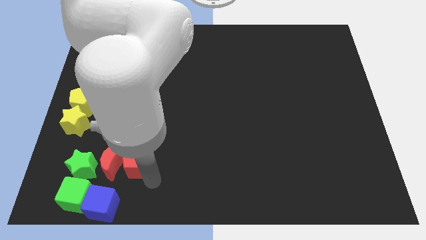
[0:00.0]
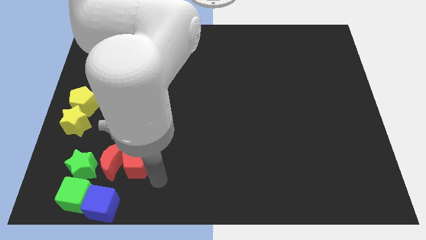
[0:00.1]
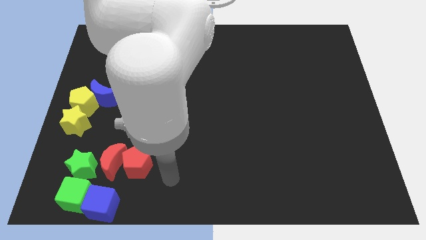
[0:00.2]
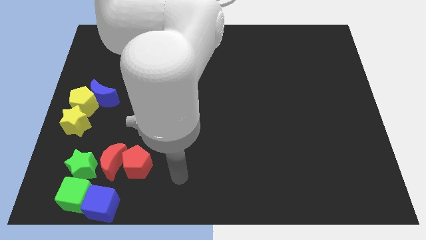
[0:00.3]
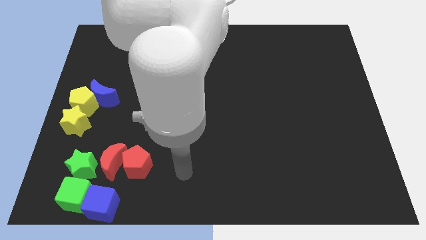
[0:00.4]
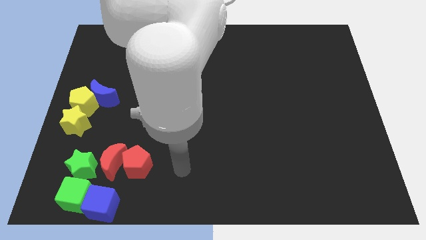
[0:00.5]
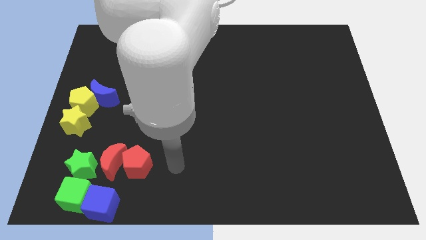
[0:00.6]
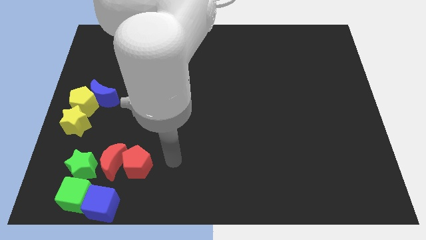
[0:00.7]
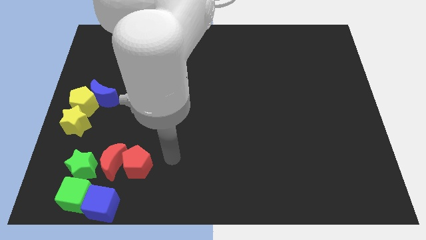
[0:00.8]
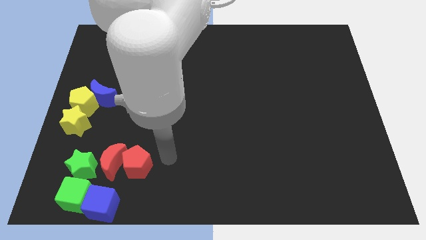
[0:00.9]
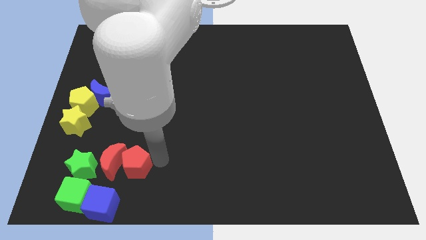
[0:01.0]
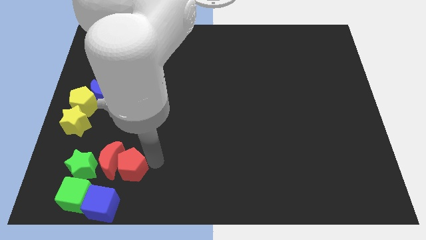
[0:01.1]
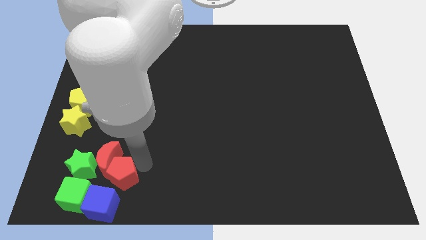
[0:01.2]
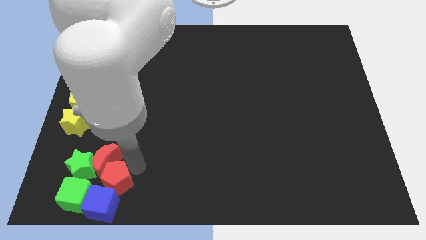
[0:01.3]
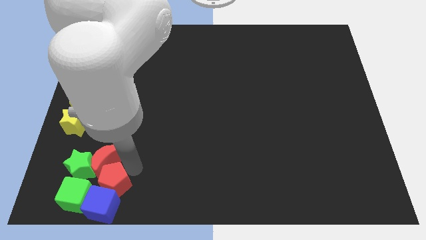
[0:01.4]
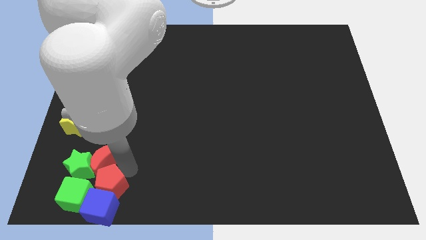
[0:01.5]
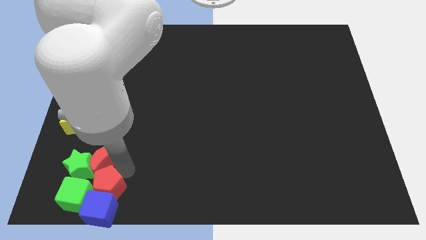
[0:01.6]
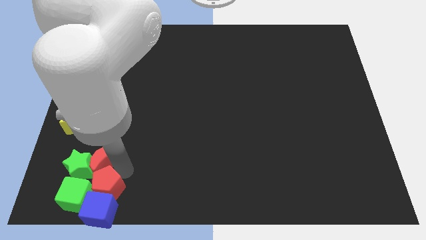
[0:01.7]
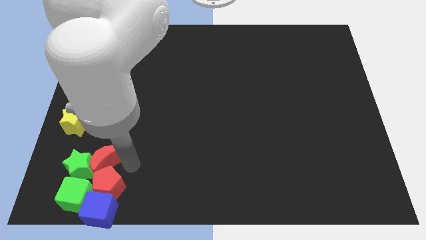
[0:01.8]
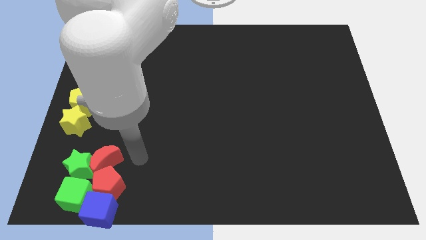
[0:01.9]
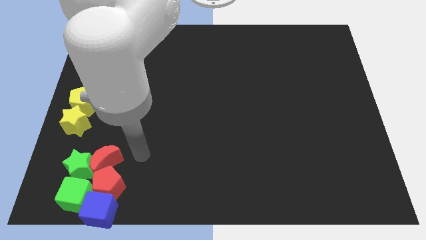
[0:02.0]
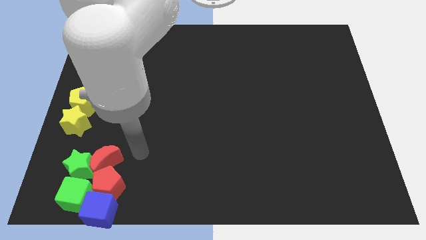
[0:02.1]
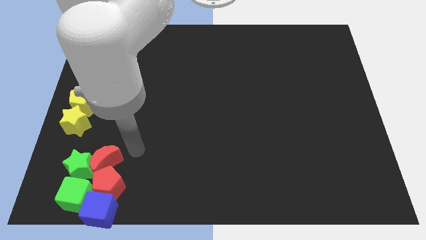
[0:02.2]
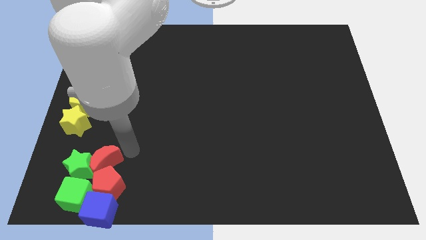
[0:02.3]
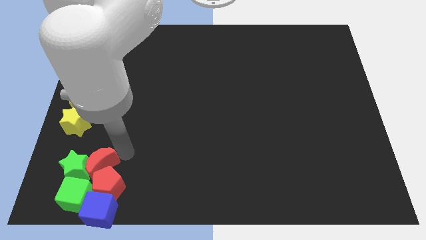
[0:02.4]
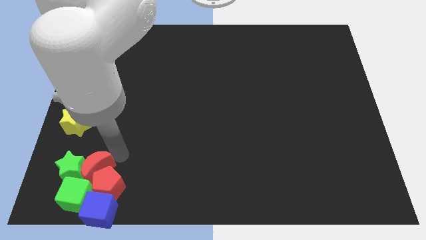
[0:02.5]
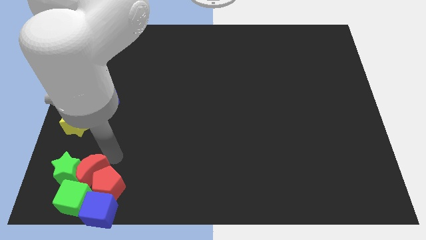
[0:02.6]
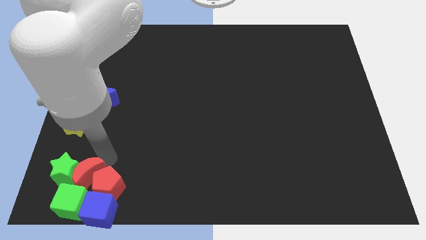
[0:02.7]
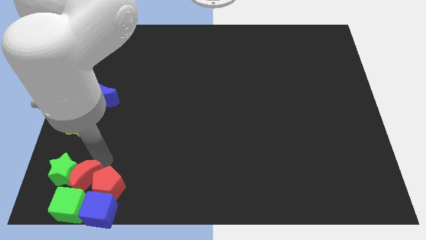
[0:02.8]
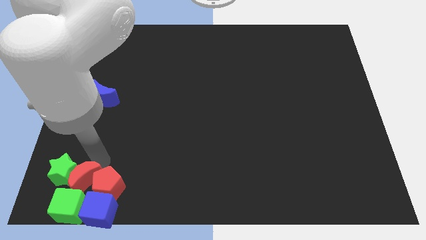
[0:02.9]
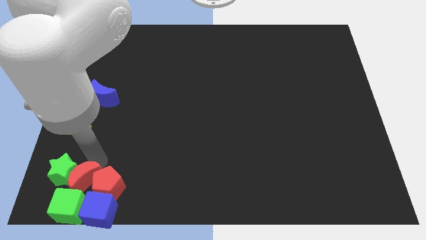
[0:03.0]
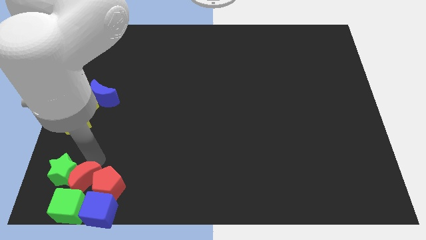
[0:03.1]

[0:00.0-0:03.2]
move the red pentagon and red crescent into the blue and green cubes

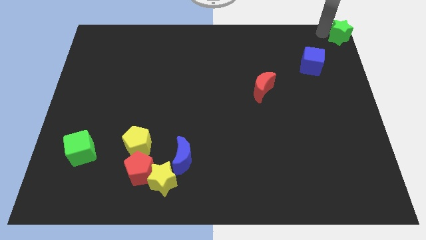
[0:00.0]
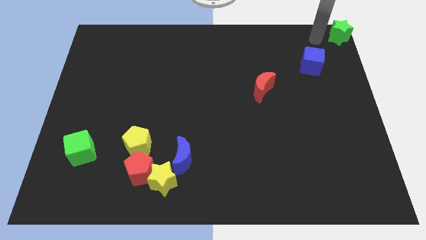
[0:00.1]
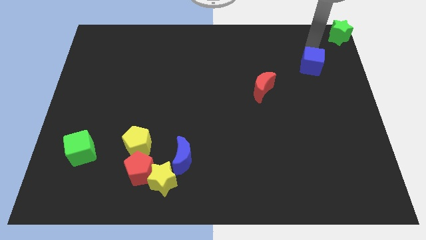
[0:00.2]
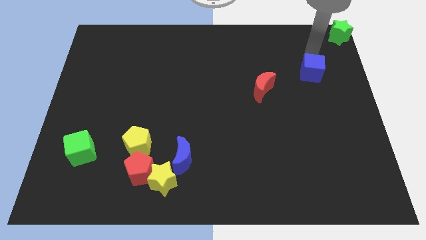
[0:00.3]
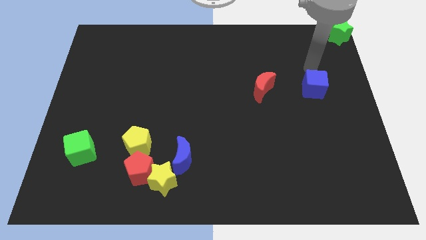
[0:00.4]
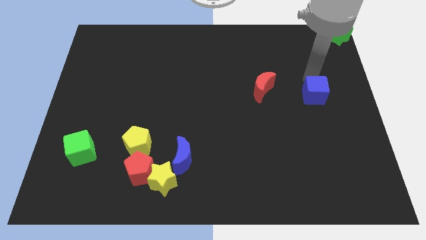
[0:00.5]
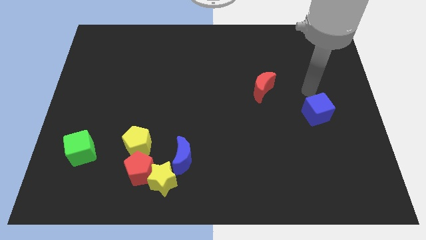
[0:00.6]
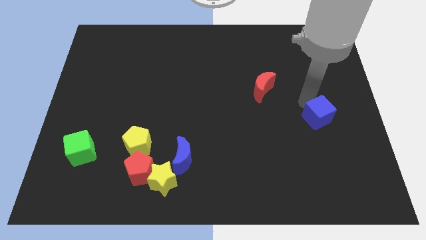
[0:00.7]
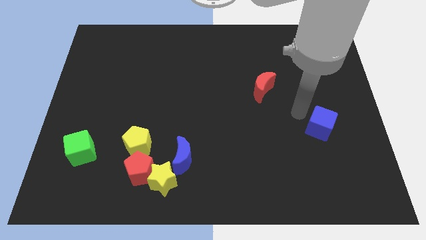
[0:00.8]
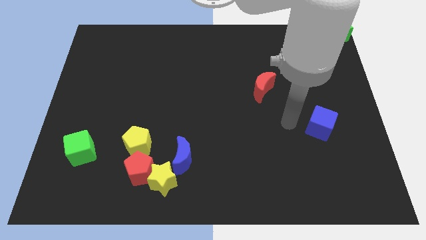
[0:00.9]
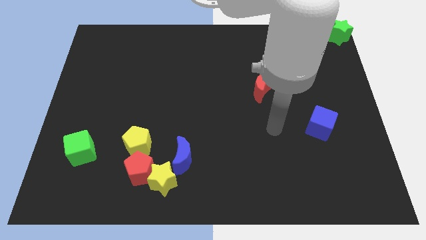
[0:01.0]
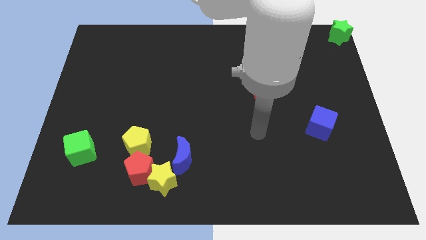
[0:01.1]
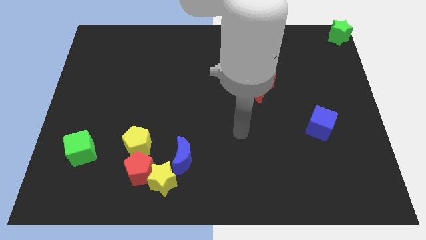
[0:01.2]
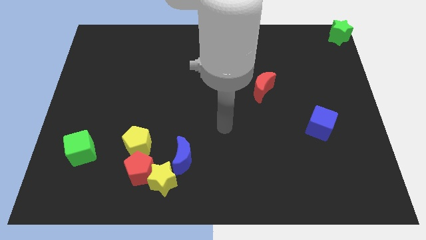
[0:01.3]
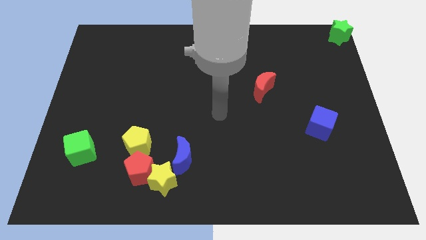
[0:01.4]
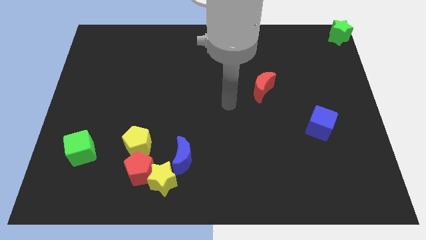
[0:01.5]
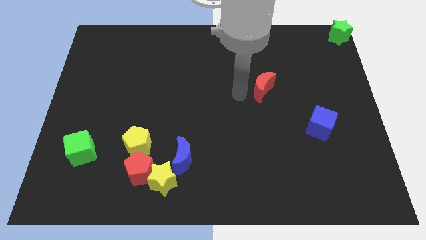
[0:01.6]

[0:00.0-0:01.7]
move the blue cube down slightly

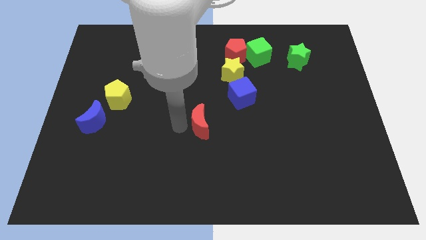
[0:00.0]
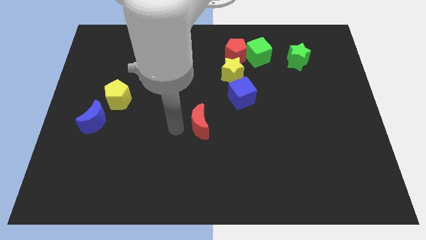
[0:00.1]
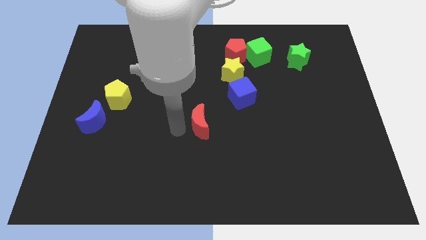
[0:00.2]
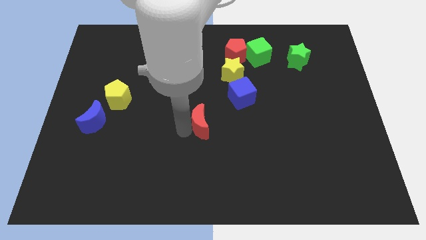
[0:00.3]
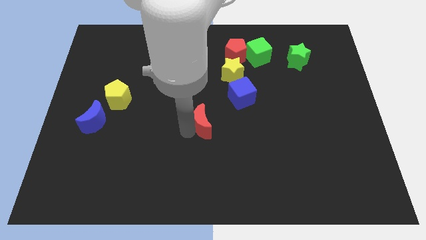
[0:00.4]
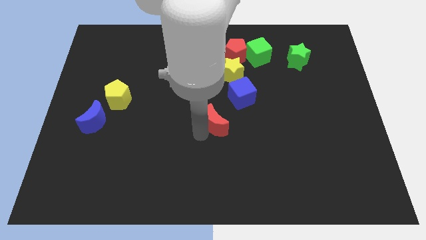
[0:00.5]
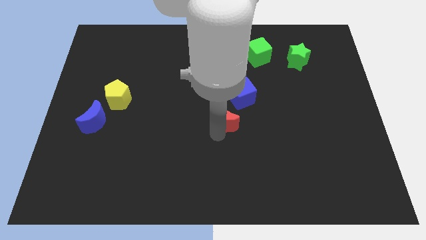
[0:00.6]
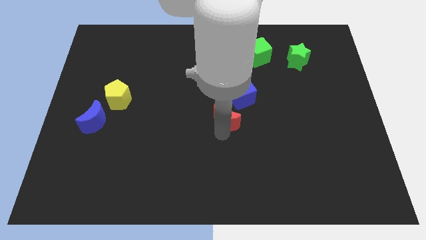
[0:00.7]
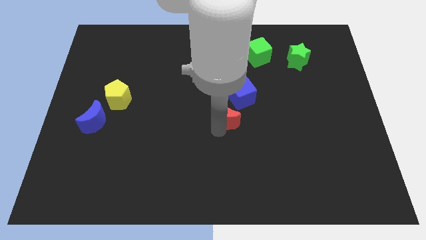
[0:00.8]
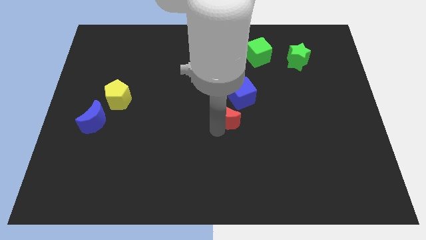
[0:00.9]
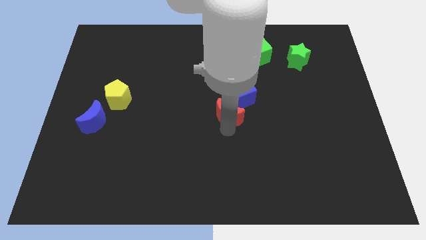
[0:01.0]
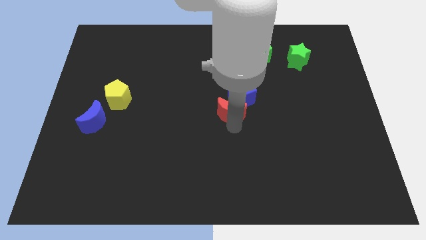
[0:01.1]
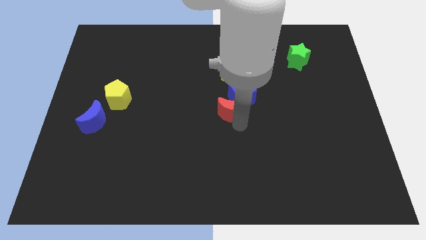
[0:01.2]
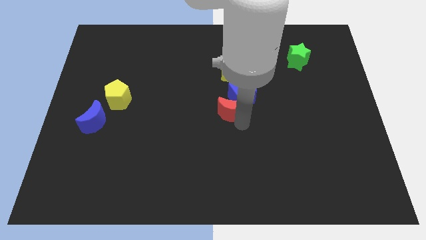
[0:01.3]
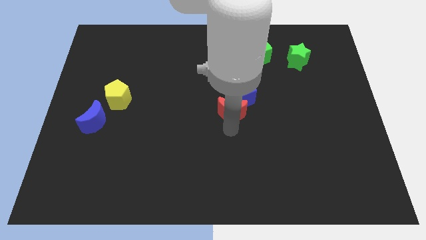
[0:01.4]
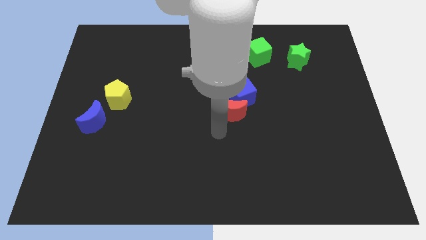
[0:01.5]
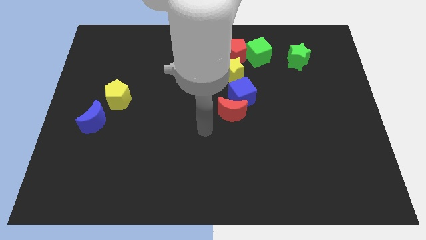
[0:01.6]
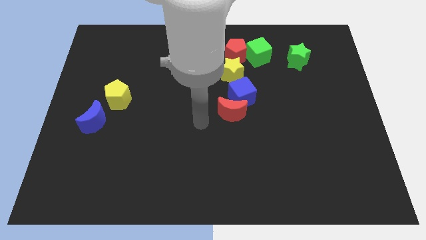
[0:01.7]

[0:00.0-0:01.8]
move the red crescent to the bottom of the blue cube

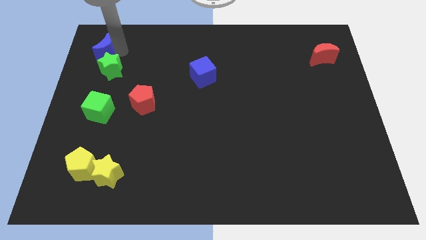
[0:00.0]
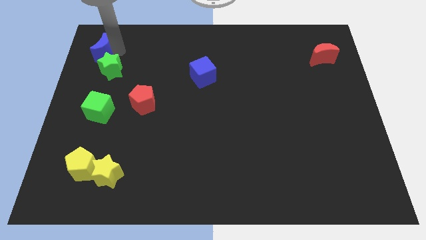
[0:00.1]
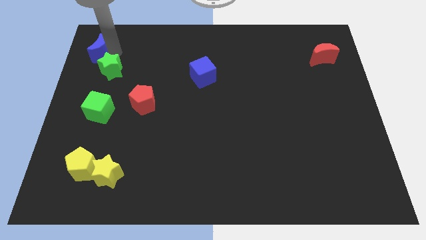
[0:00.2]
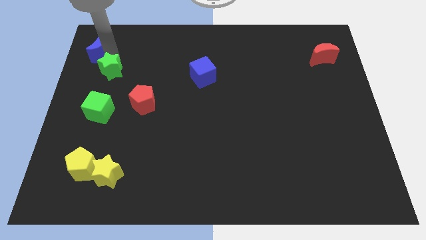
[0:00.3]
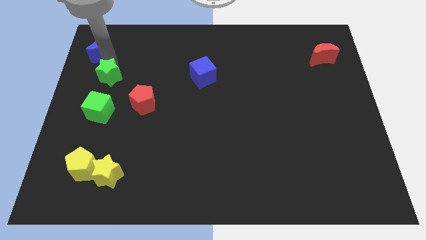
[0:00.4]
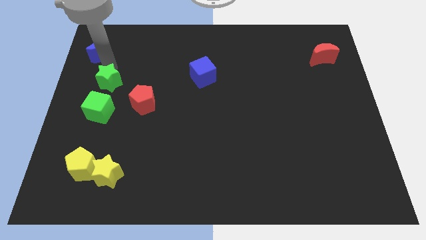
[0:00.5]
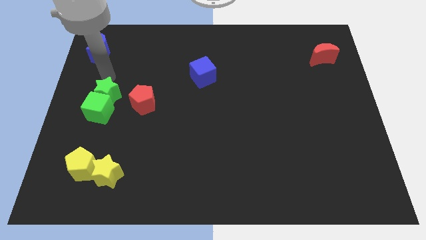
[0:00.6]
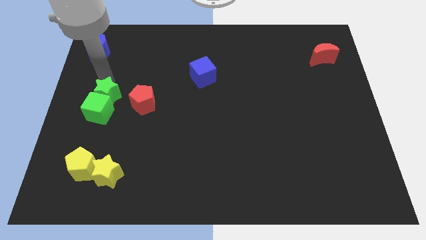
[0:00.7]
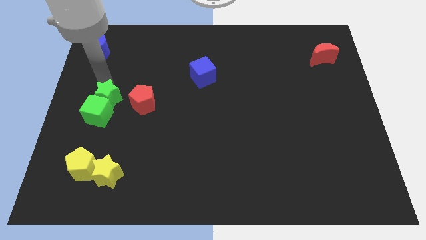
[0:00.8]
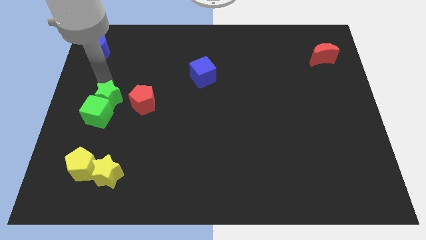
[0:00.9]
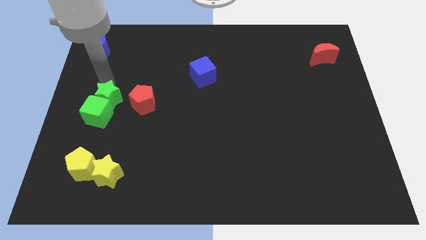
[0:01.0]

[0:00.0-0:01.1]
separate green star from blue crescent

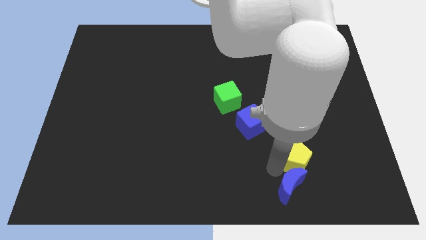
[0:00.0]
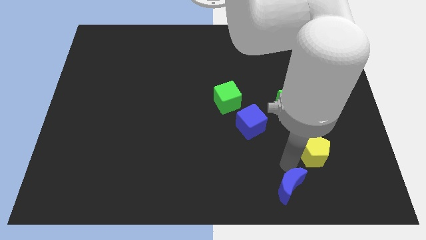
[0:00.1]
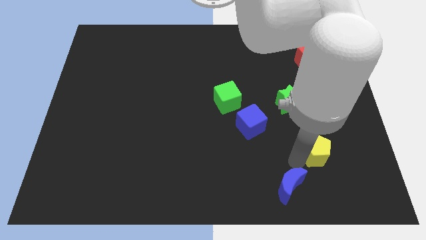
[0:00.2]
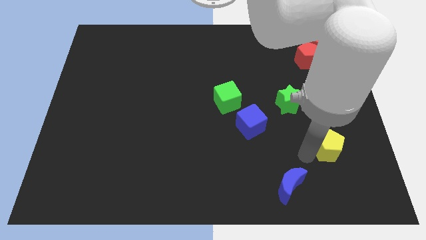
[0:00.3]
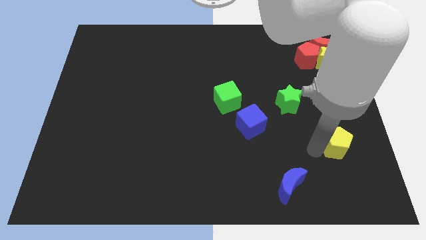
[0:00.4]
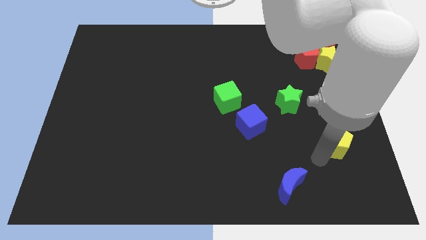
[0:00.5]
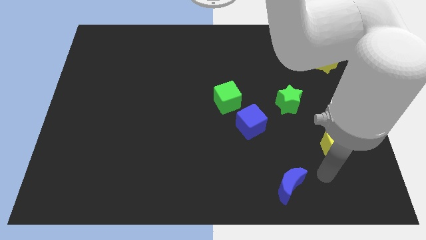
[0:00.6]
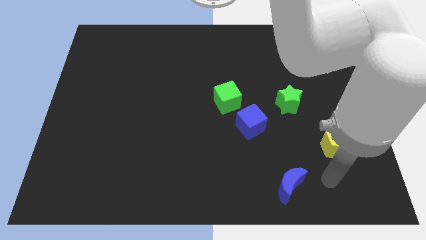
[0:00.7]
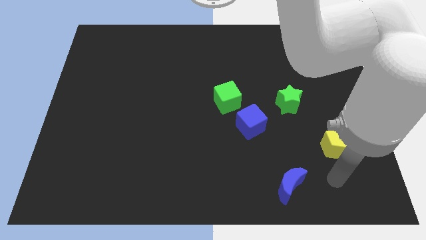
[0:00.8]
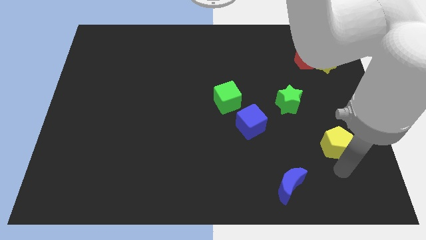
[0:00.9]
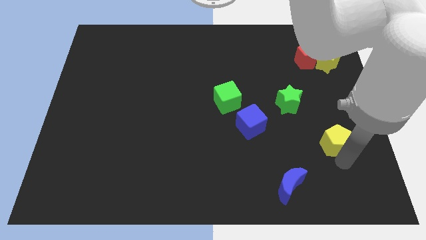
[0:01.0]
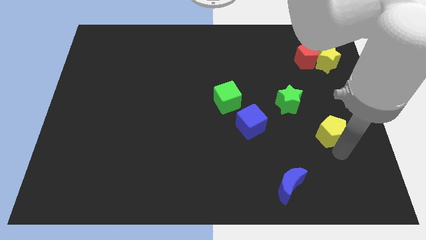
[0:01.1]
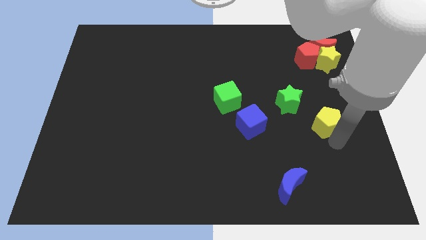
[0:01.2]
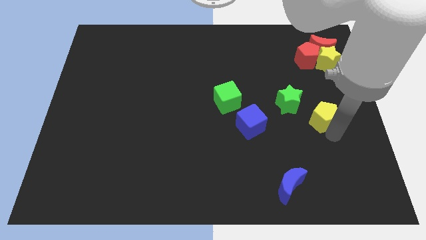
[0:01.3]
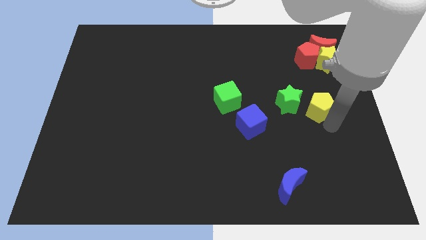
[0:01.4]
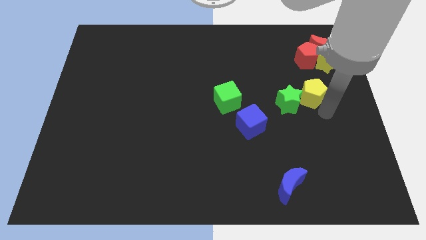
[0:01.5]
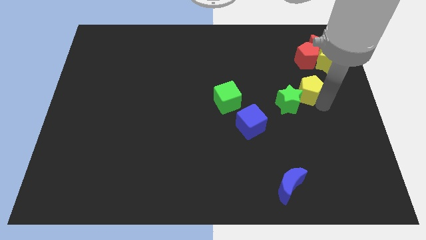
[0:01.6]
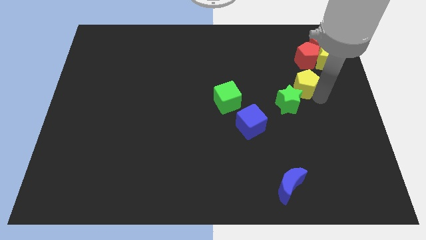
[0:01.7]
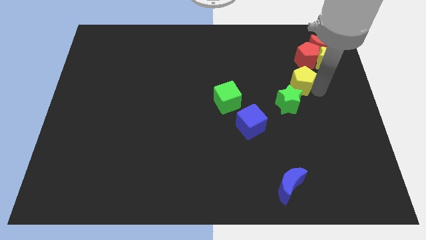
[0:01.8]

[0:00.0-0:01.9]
place the yellow pentagon to the top right of the green star
